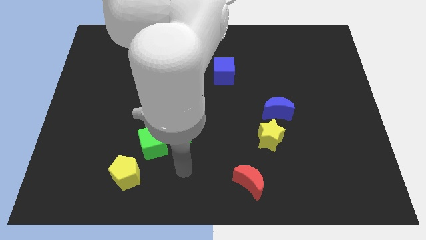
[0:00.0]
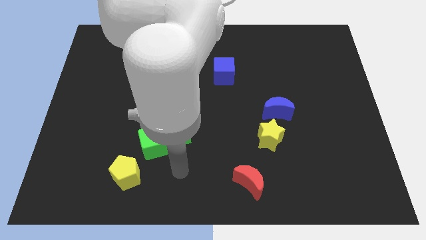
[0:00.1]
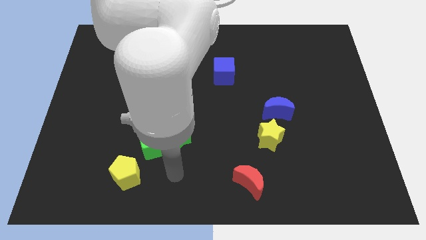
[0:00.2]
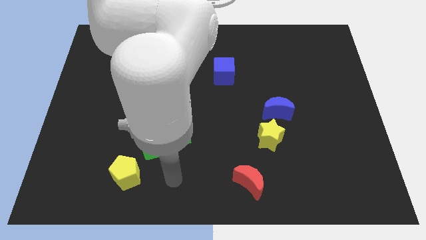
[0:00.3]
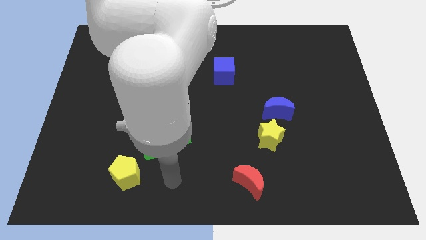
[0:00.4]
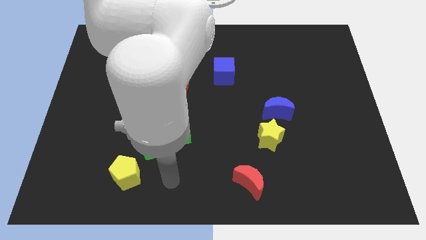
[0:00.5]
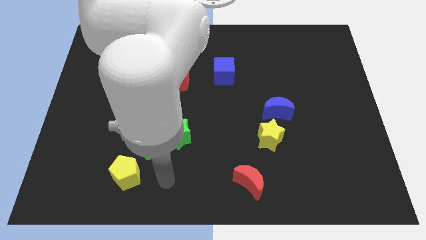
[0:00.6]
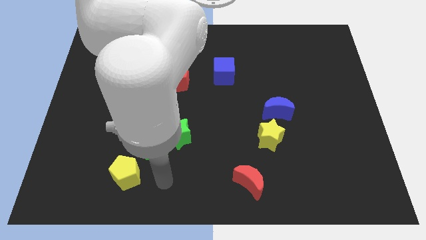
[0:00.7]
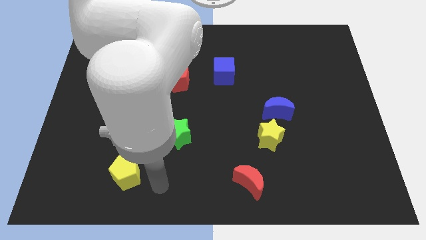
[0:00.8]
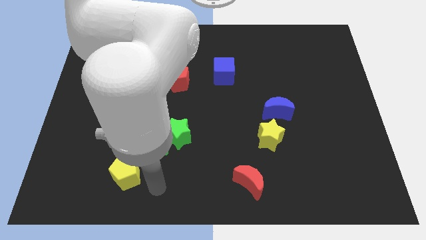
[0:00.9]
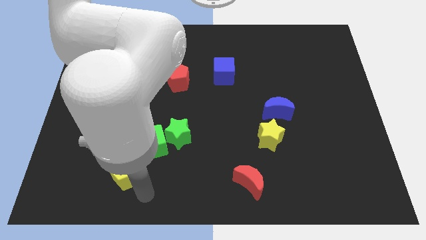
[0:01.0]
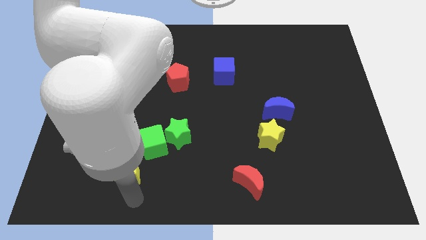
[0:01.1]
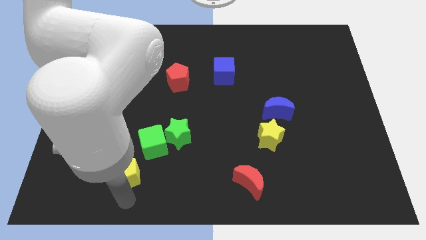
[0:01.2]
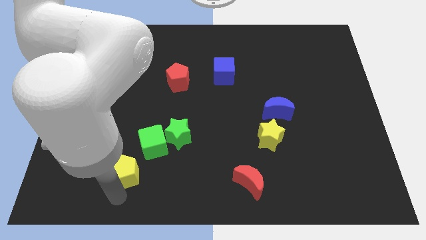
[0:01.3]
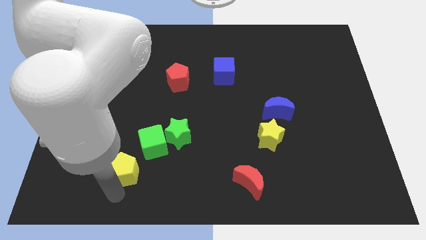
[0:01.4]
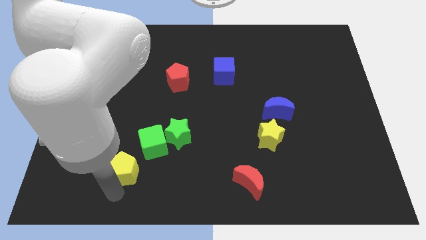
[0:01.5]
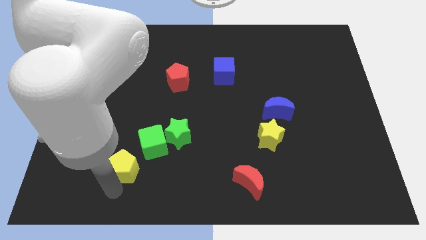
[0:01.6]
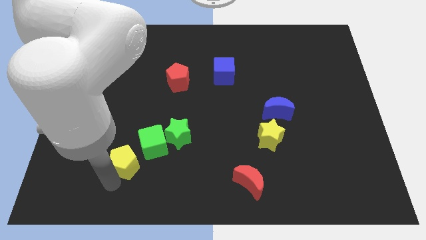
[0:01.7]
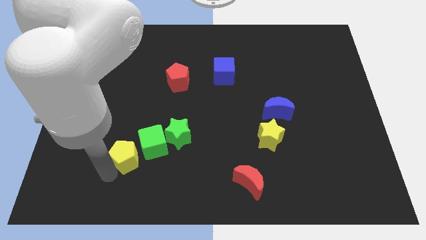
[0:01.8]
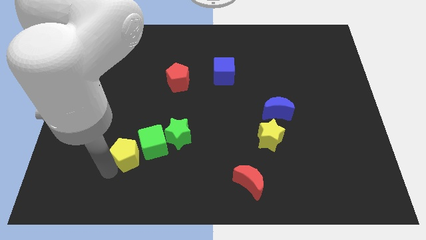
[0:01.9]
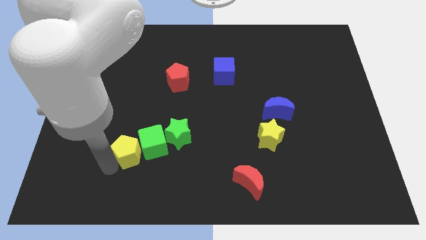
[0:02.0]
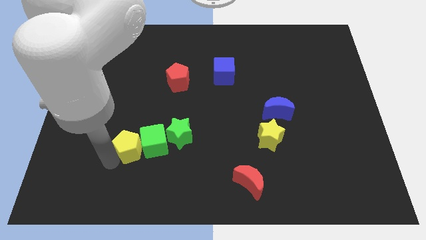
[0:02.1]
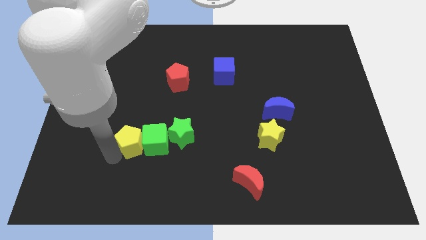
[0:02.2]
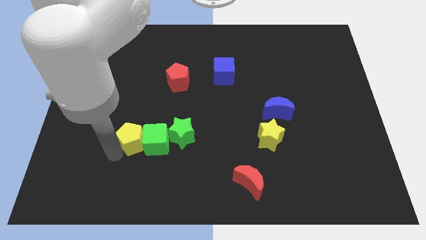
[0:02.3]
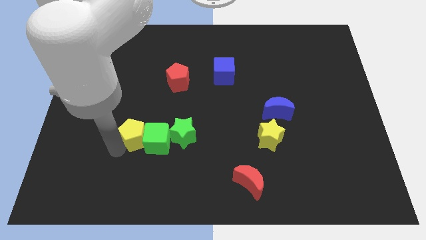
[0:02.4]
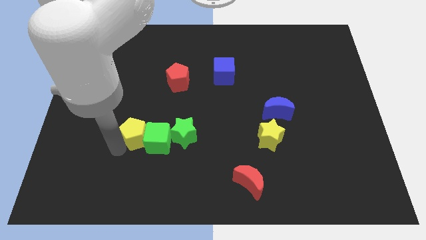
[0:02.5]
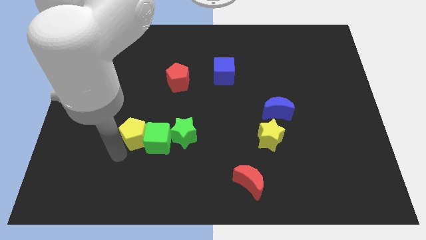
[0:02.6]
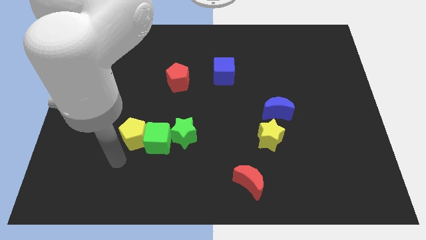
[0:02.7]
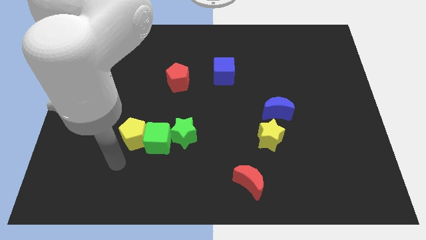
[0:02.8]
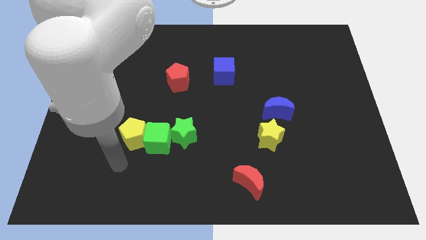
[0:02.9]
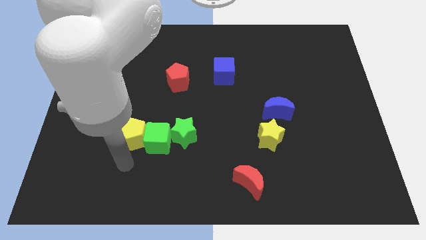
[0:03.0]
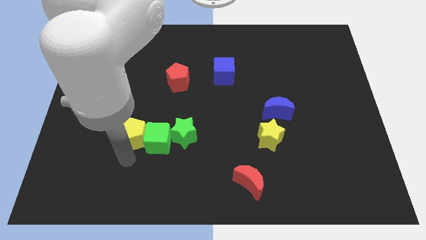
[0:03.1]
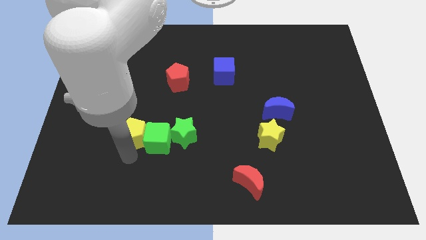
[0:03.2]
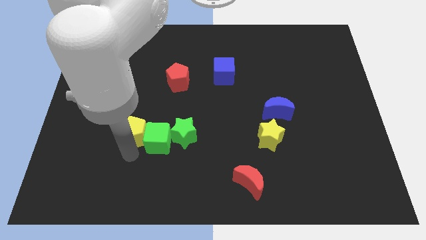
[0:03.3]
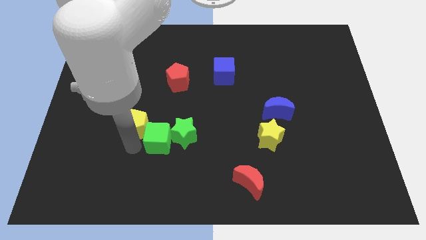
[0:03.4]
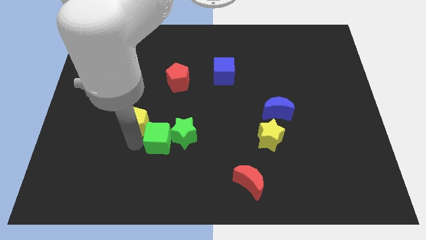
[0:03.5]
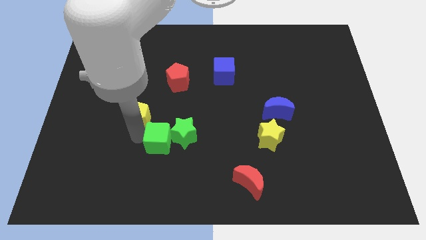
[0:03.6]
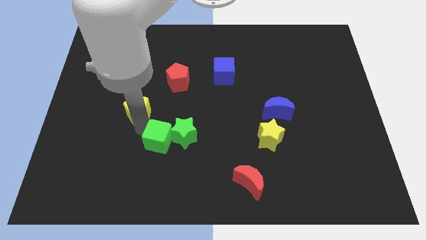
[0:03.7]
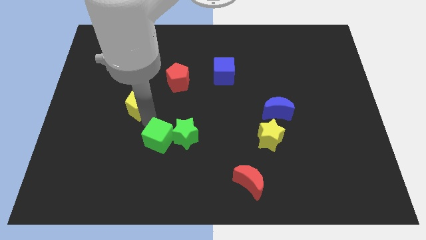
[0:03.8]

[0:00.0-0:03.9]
push the yellow pentagon slightly upwards

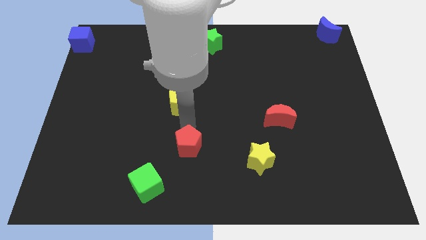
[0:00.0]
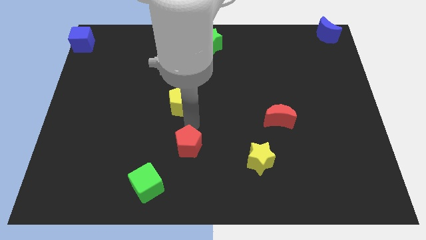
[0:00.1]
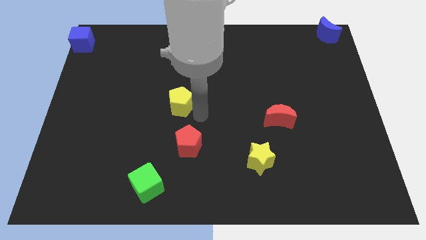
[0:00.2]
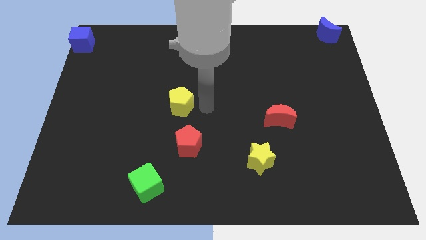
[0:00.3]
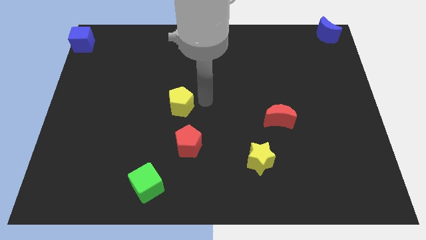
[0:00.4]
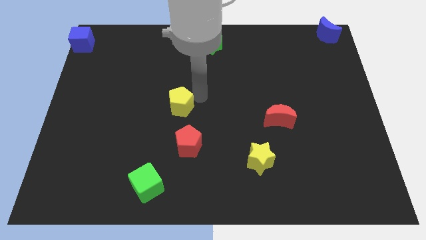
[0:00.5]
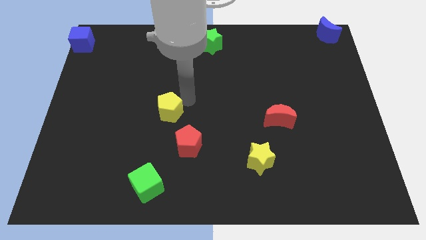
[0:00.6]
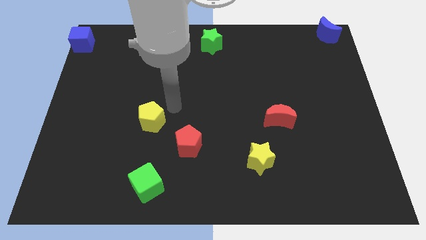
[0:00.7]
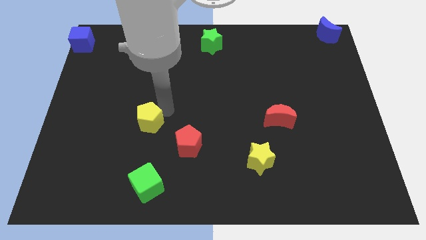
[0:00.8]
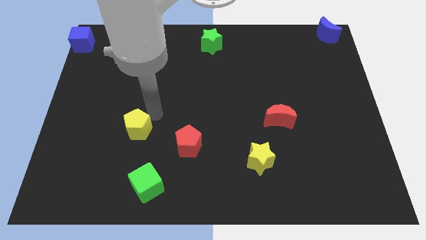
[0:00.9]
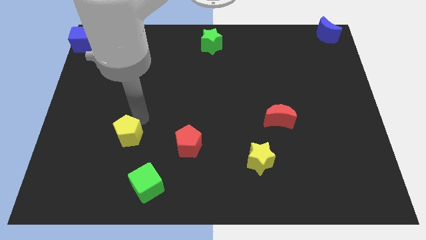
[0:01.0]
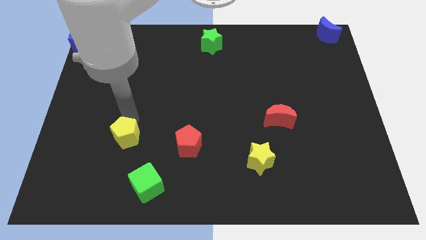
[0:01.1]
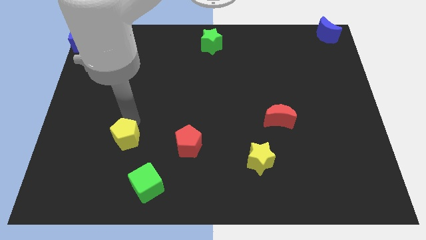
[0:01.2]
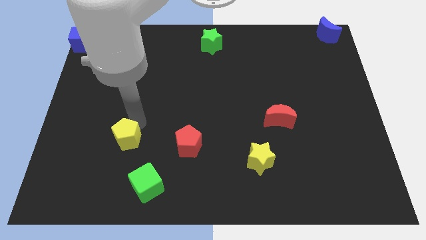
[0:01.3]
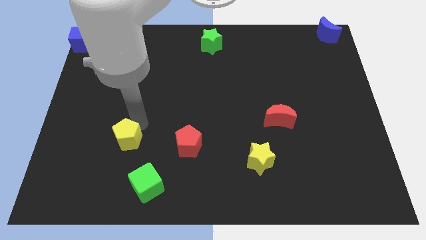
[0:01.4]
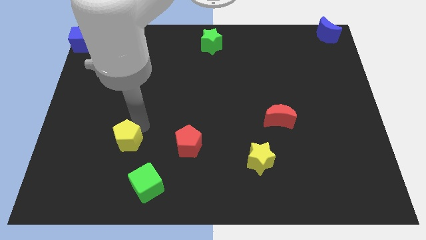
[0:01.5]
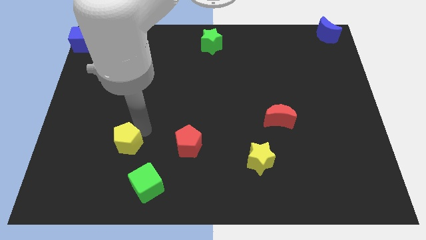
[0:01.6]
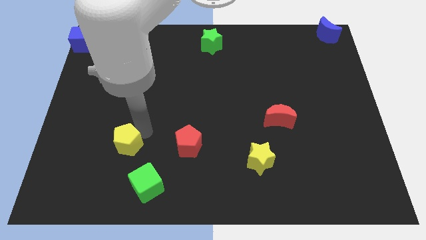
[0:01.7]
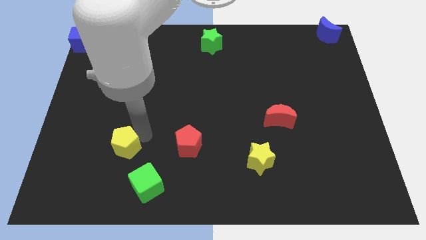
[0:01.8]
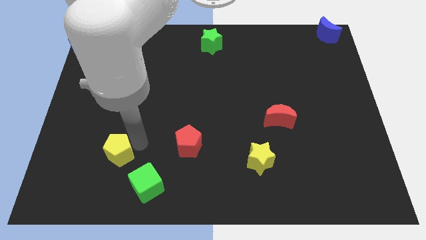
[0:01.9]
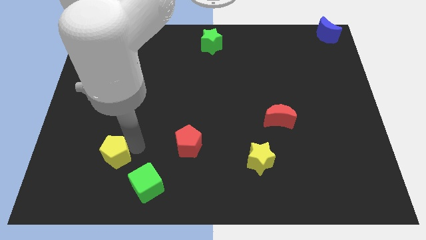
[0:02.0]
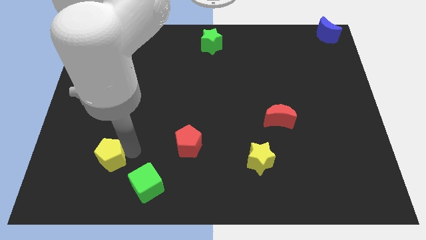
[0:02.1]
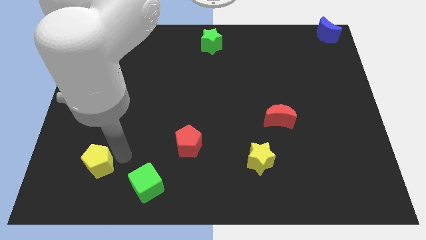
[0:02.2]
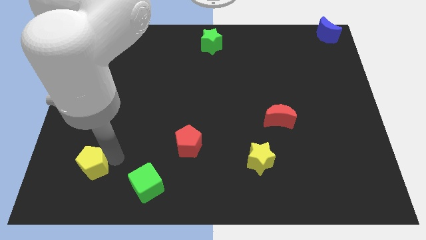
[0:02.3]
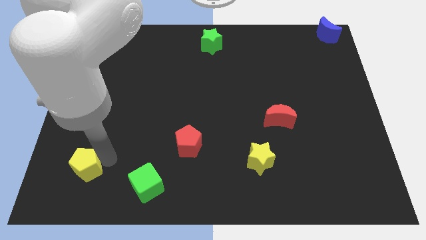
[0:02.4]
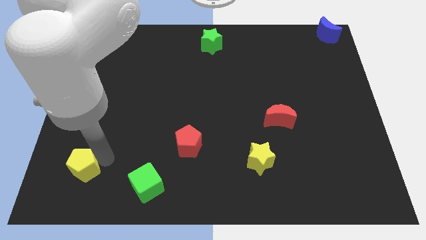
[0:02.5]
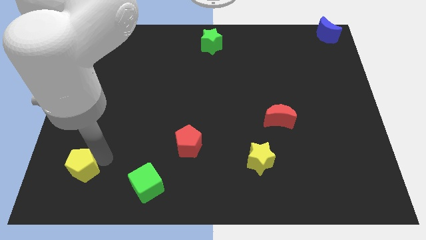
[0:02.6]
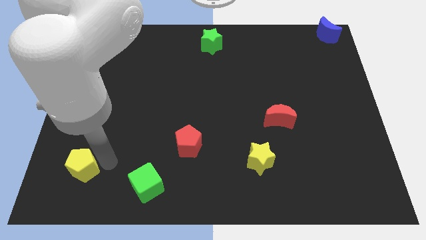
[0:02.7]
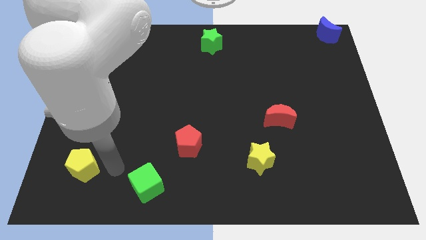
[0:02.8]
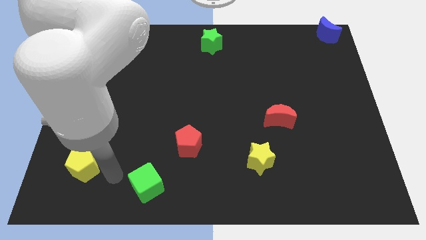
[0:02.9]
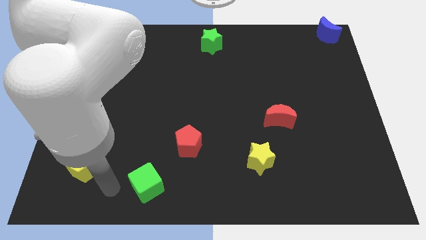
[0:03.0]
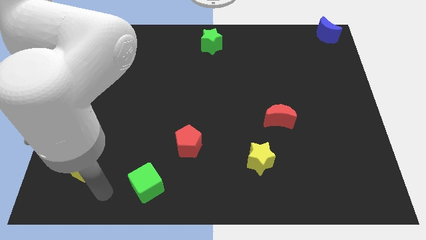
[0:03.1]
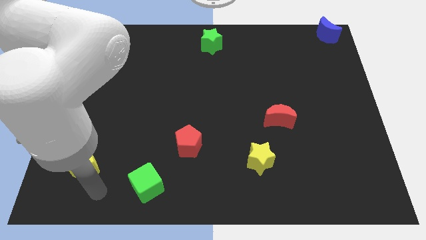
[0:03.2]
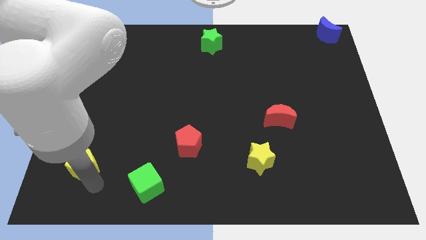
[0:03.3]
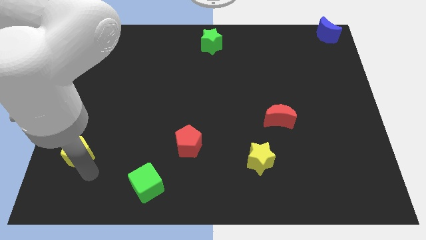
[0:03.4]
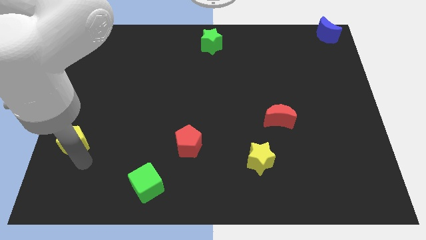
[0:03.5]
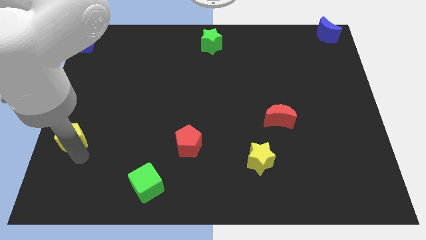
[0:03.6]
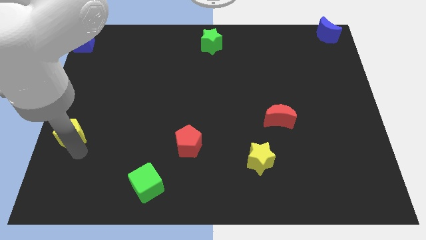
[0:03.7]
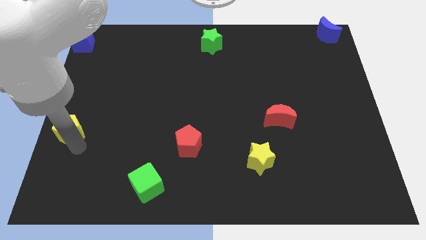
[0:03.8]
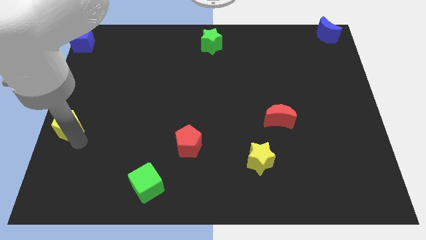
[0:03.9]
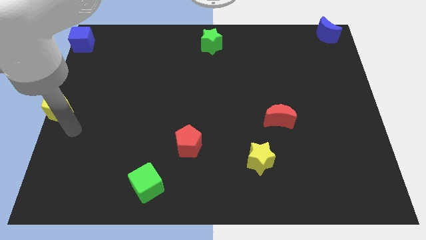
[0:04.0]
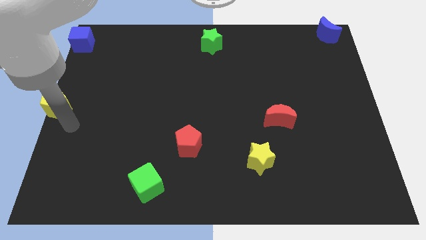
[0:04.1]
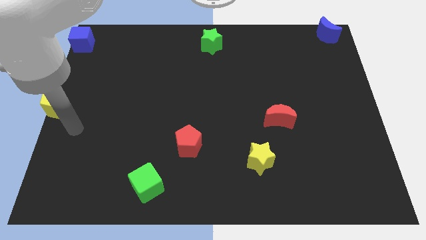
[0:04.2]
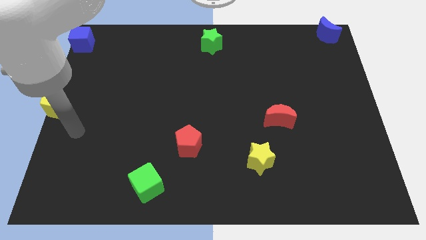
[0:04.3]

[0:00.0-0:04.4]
push the yellow pentagon to the left center of the board

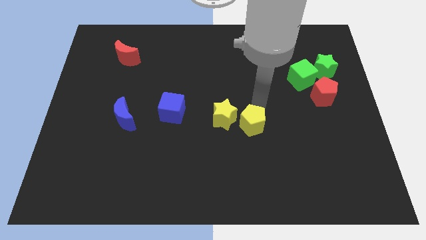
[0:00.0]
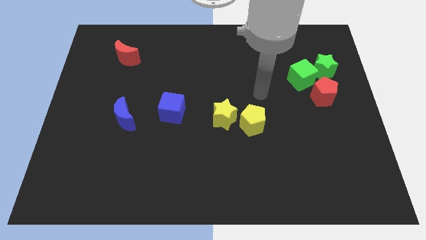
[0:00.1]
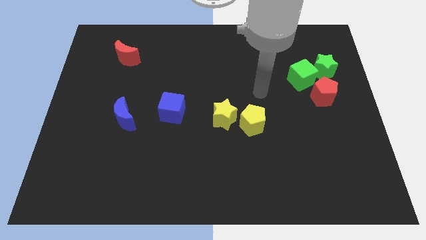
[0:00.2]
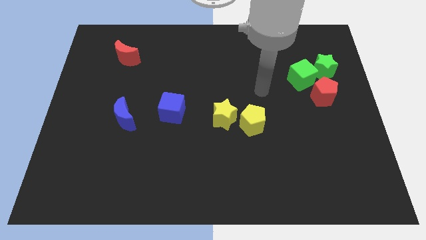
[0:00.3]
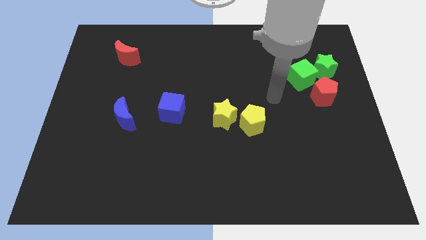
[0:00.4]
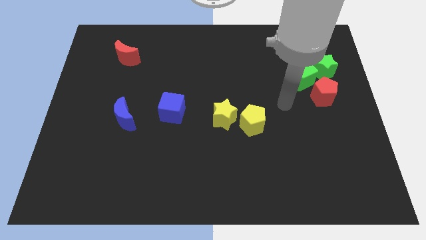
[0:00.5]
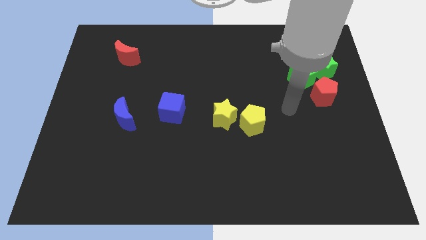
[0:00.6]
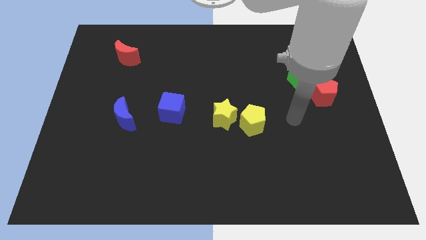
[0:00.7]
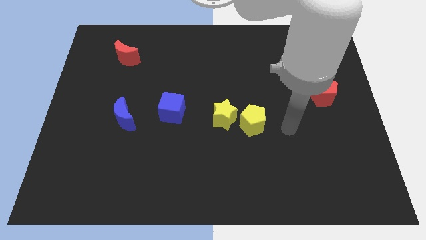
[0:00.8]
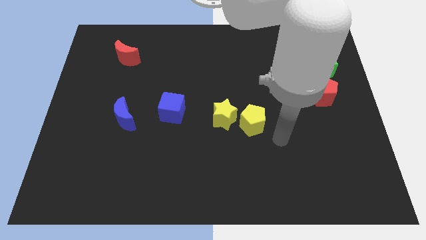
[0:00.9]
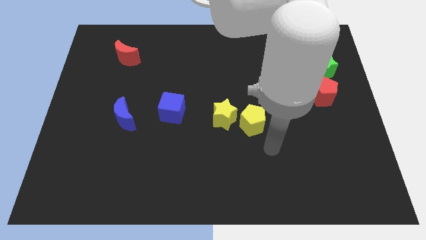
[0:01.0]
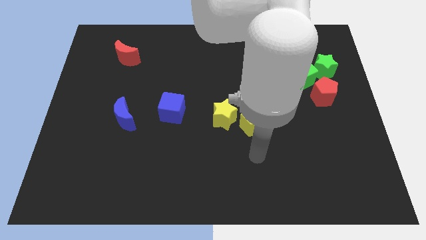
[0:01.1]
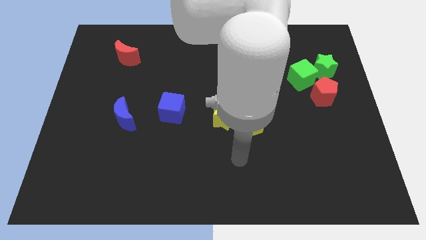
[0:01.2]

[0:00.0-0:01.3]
move your arm away from yellow pentagon
